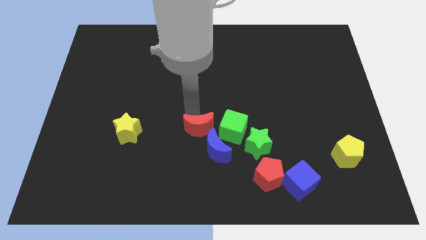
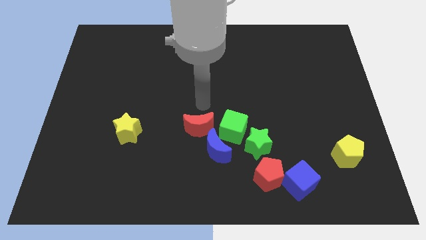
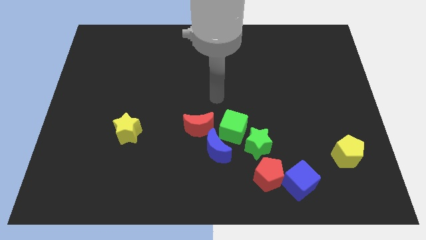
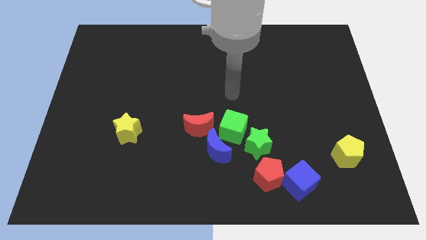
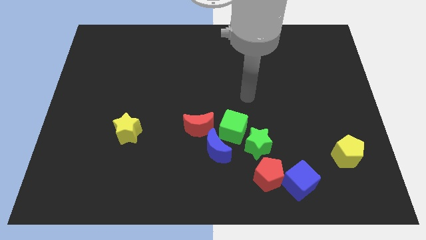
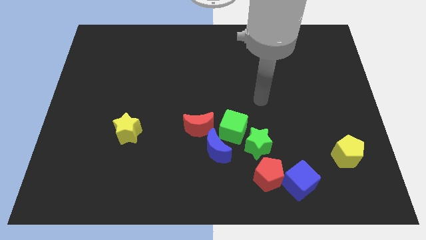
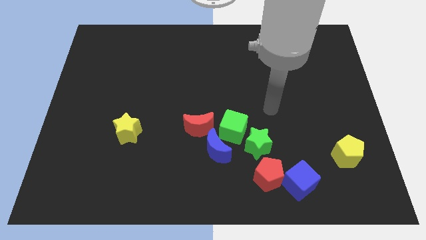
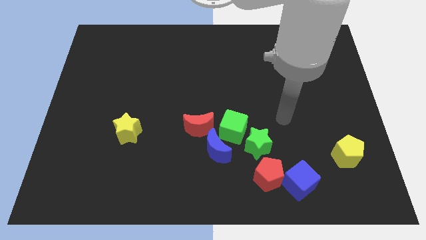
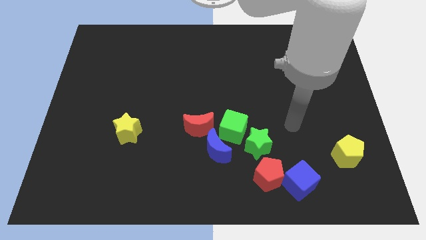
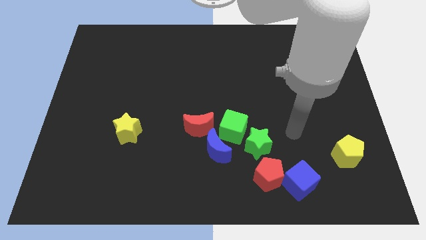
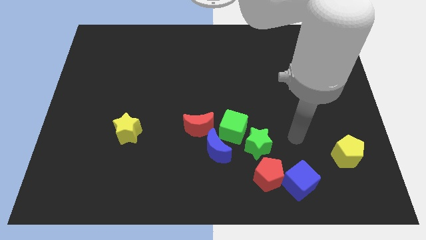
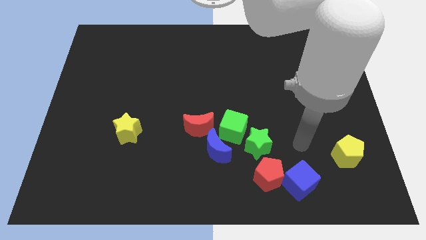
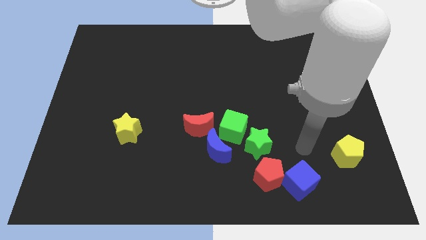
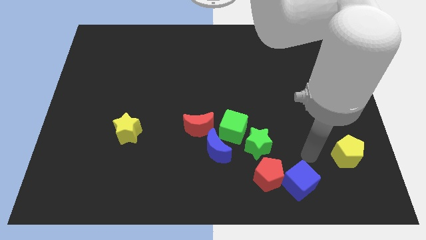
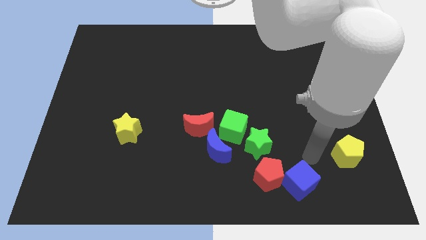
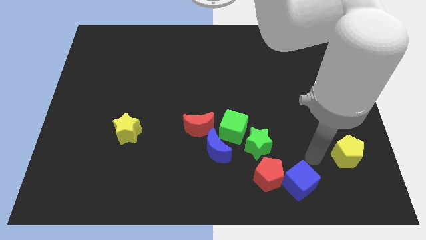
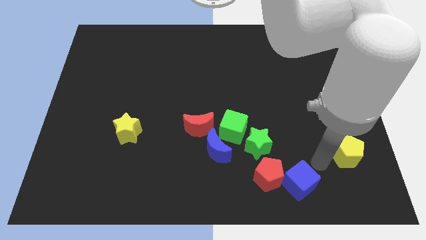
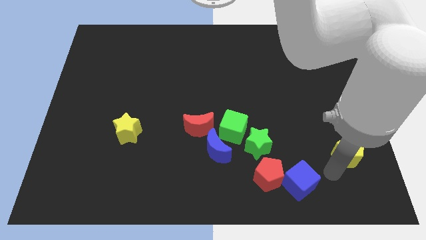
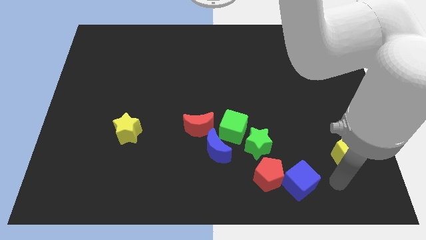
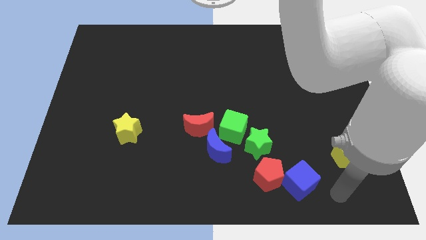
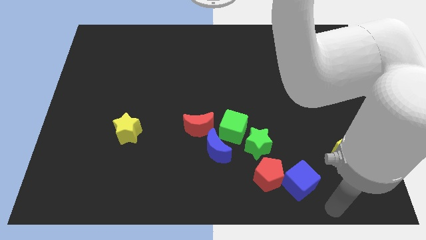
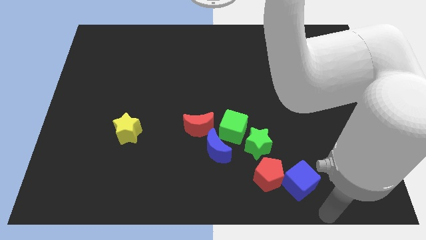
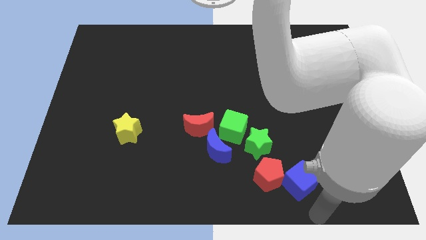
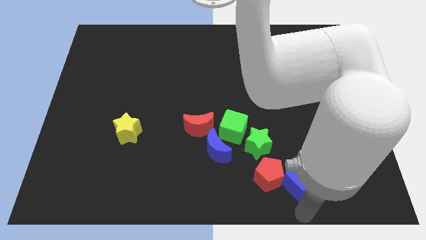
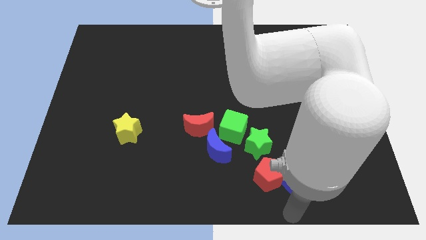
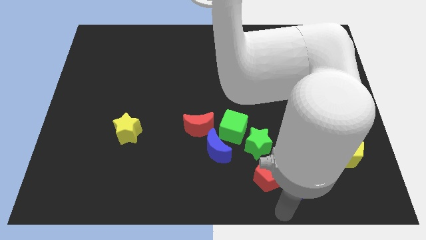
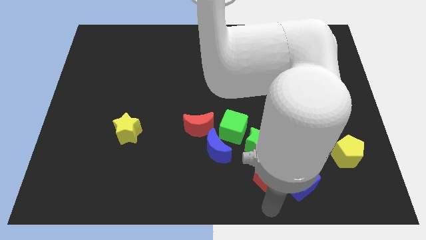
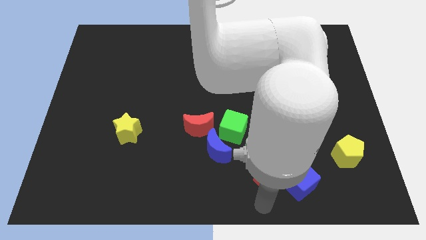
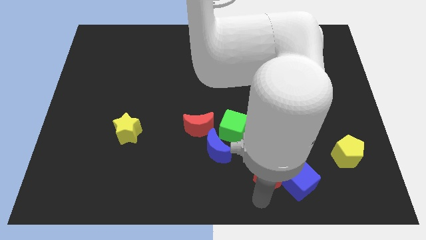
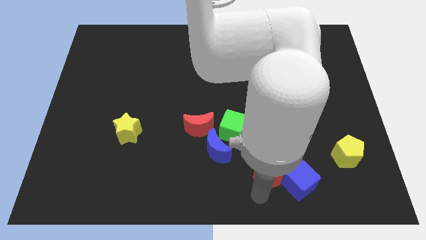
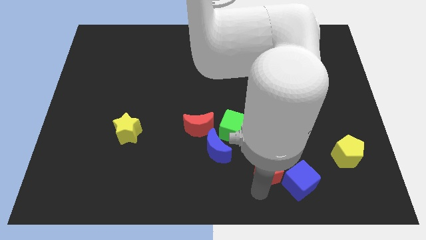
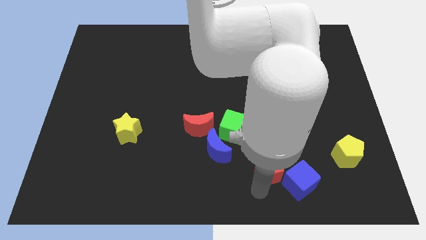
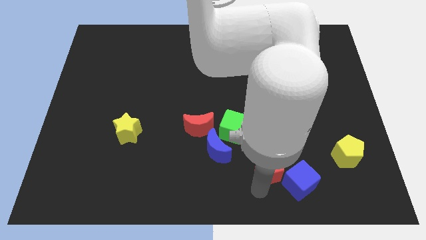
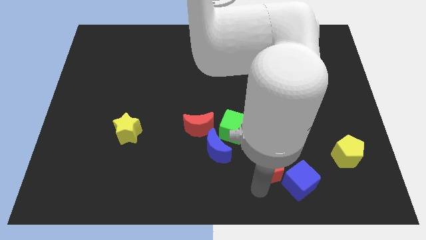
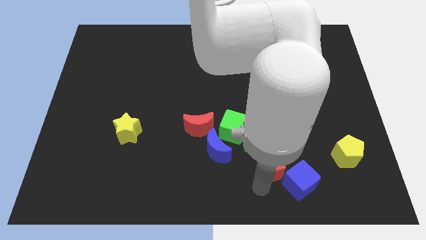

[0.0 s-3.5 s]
touch the bottom of the red pentagon

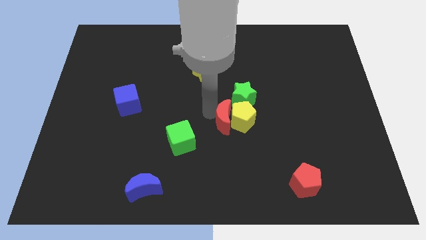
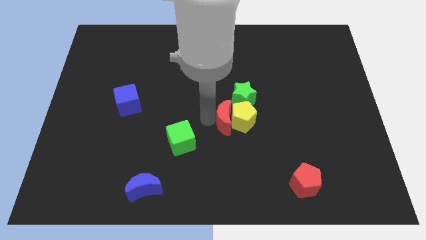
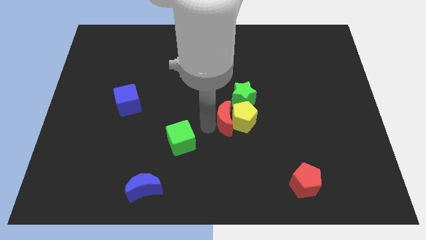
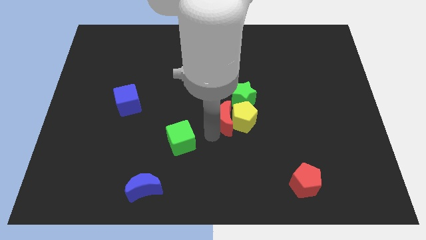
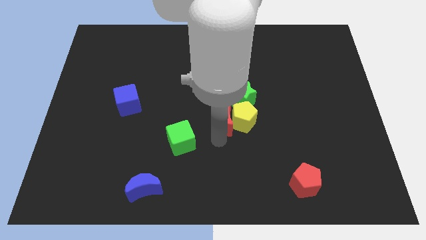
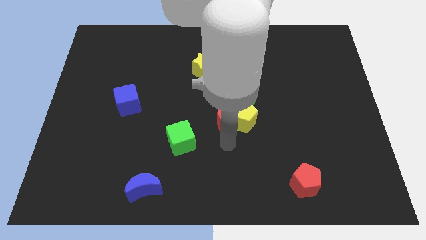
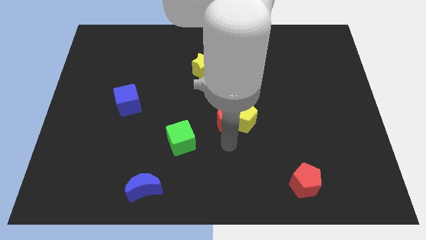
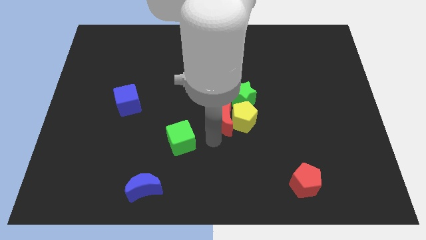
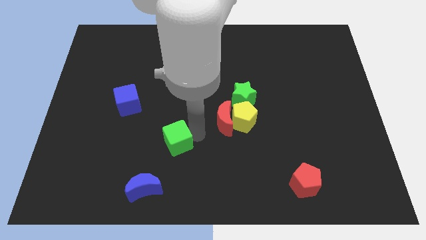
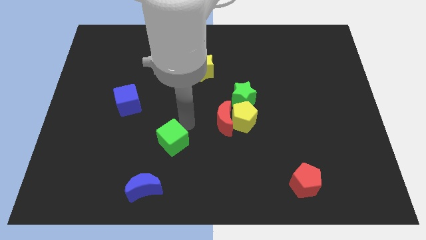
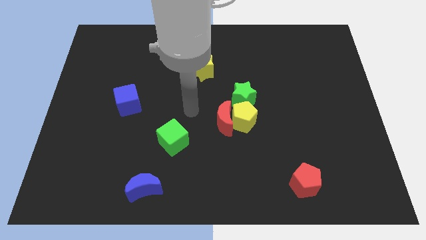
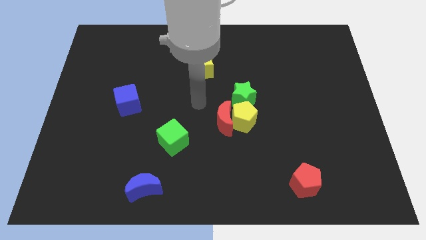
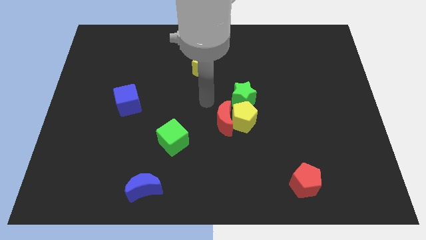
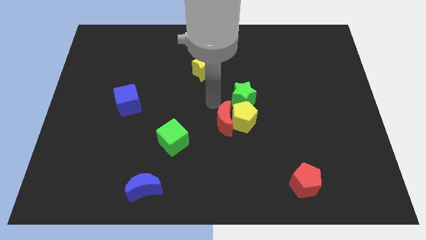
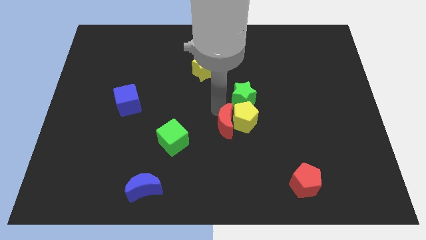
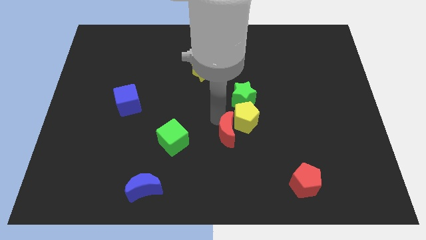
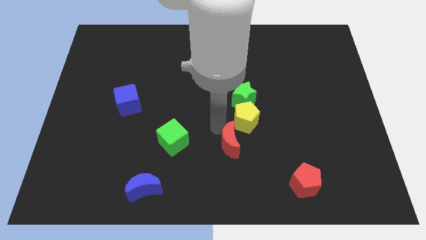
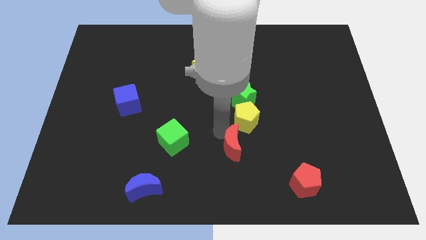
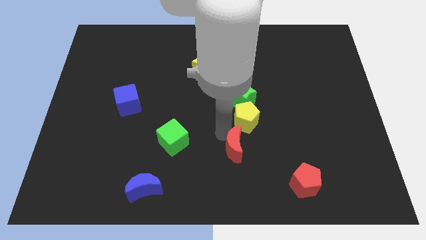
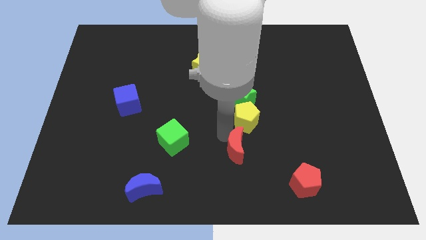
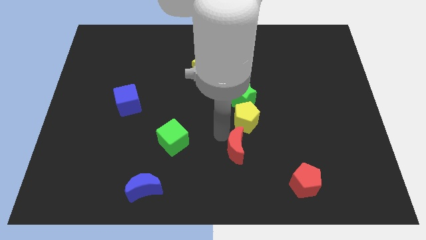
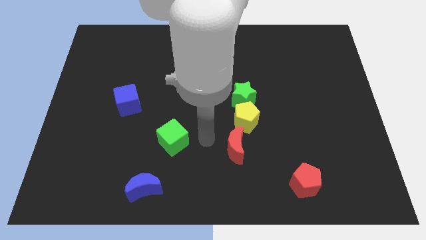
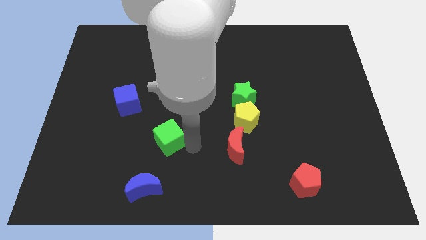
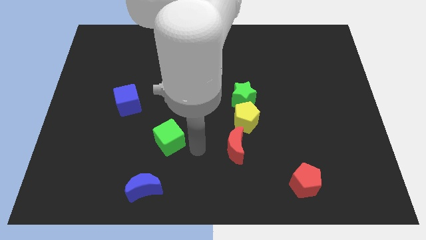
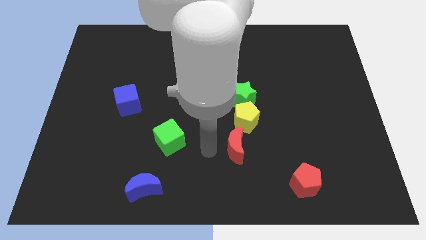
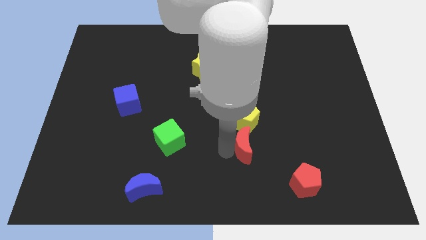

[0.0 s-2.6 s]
move the red crescent to the bottom of the yellow pentagon

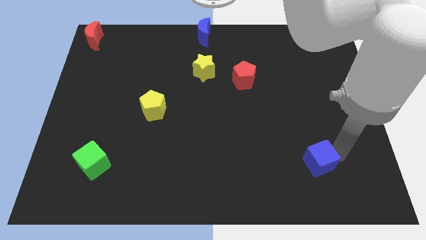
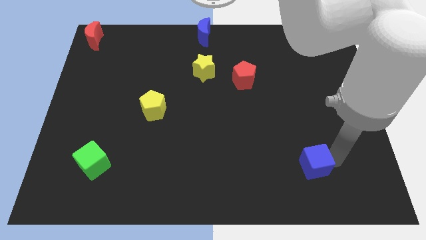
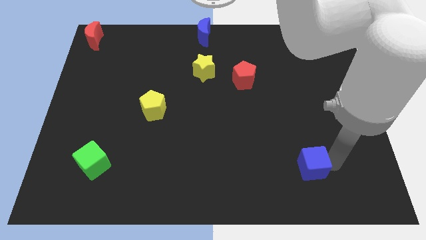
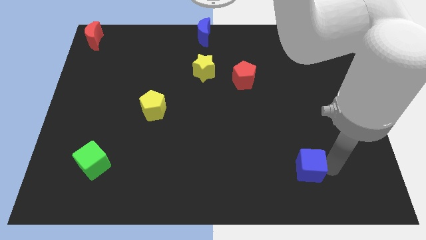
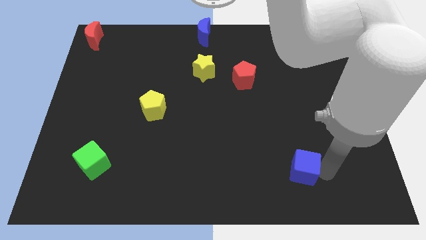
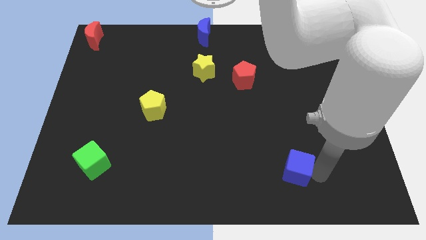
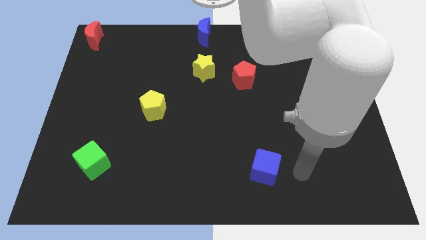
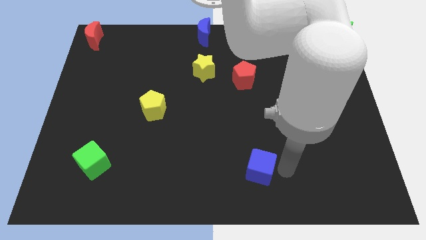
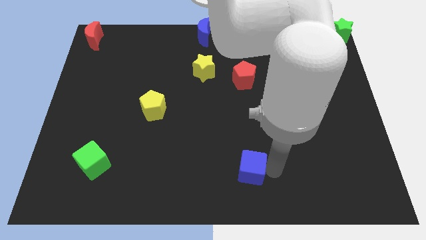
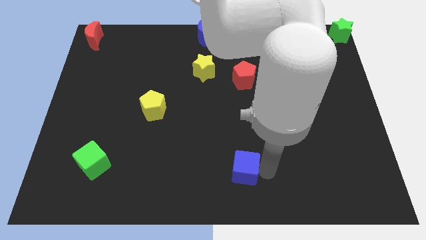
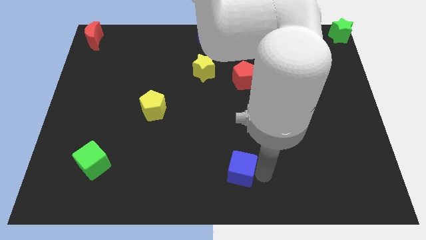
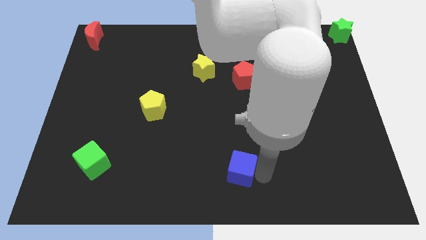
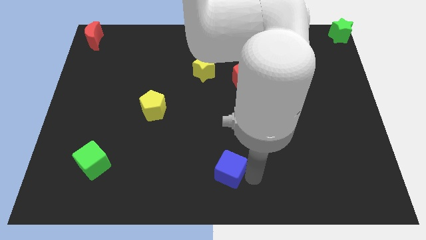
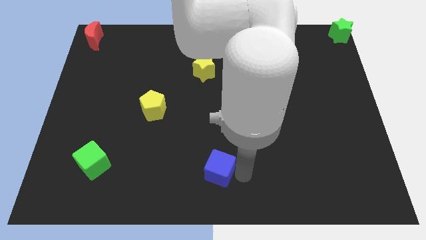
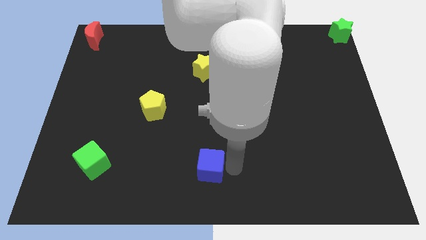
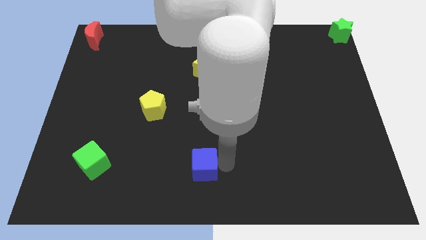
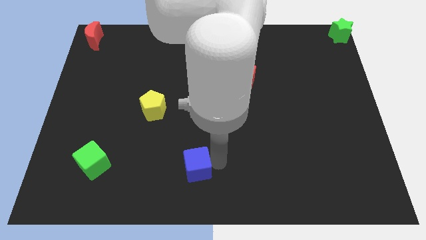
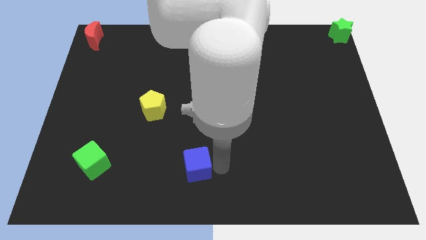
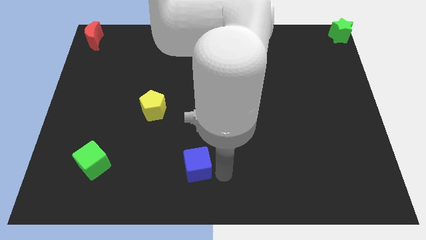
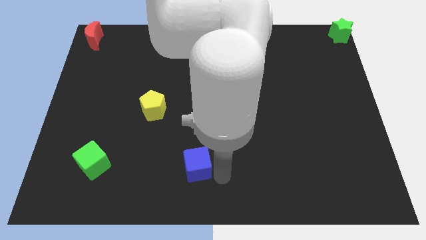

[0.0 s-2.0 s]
move the blue cube diagonally to the yellow star

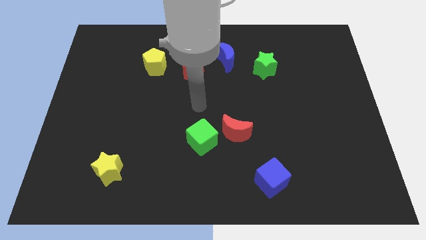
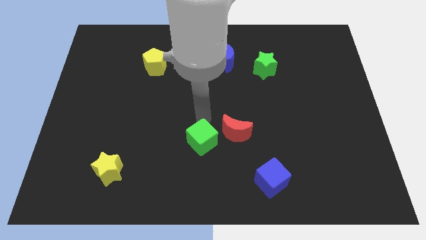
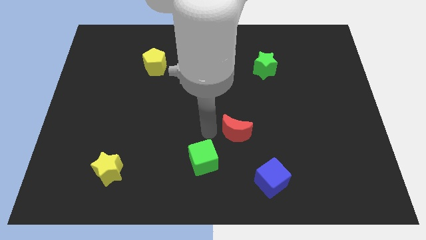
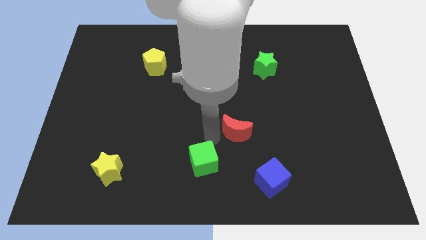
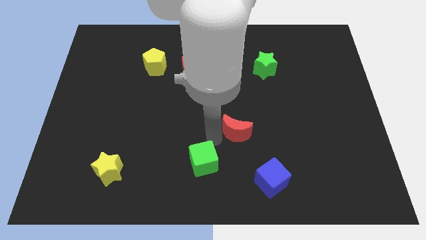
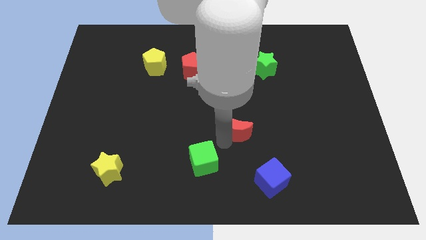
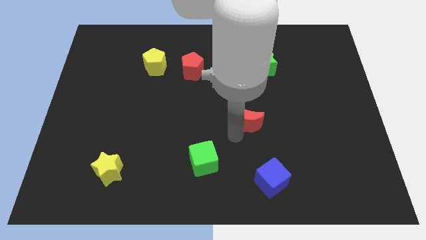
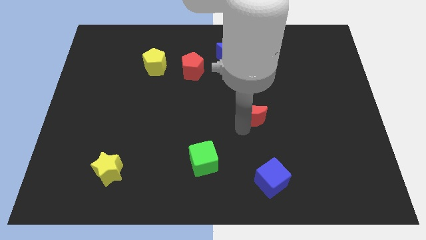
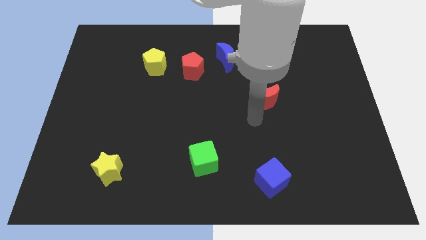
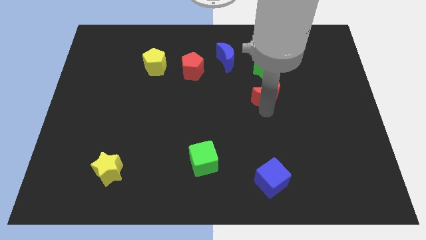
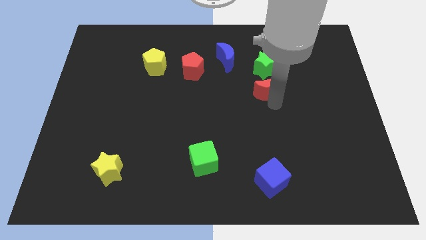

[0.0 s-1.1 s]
separate the green cube and the red crescent
